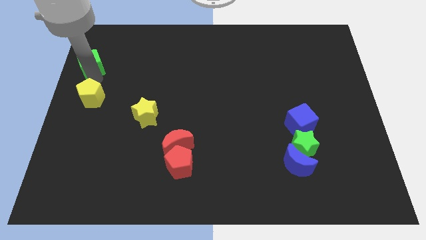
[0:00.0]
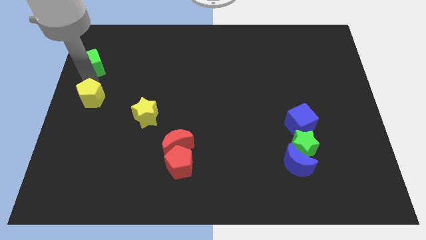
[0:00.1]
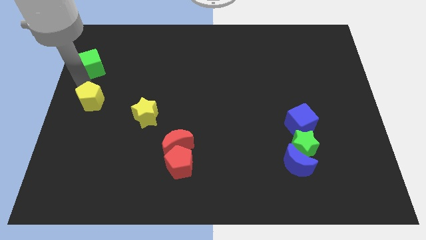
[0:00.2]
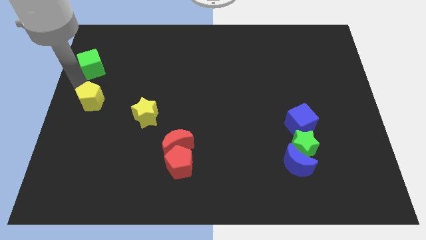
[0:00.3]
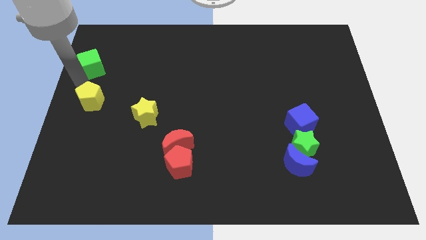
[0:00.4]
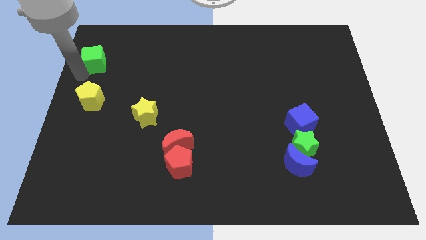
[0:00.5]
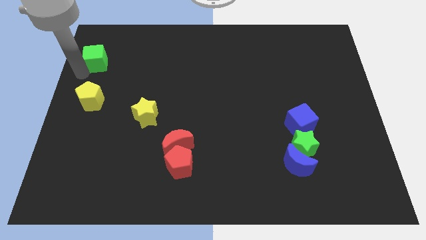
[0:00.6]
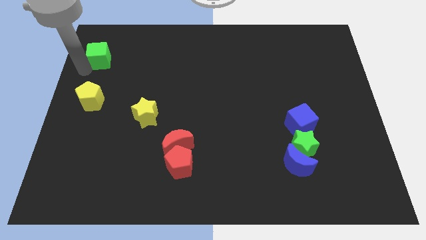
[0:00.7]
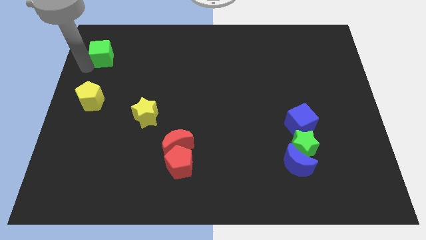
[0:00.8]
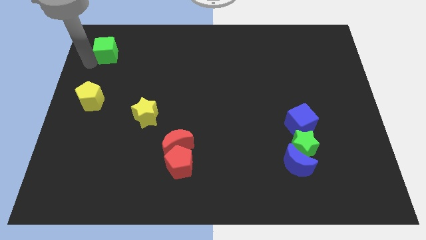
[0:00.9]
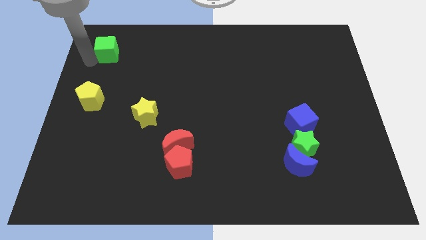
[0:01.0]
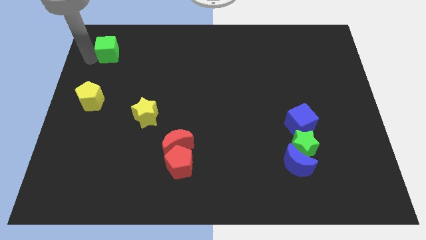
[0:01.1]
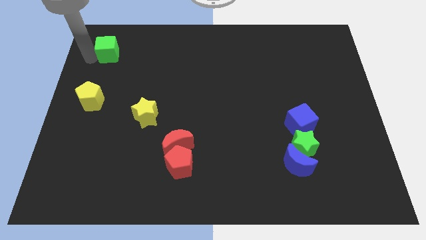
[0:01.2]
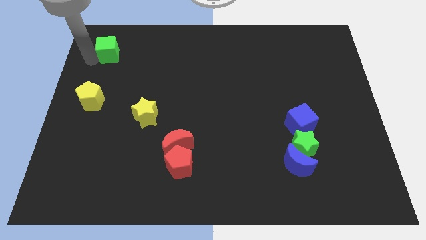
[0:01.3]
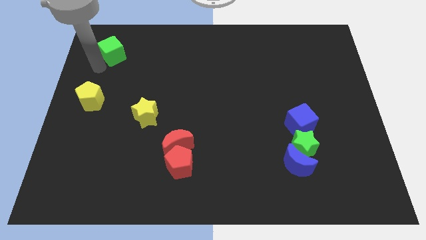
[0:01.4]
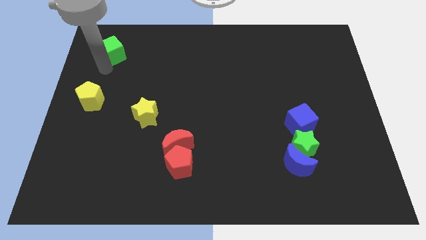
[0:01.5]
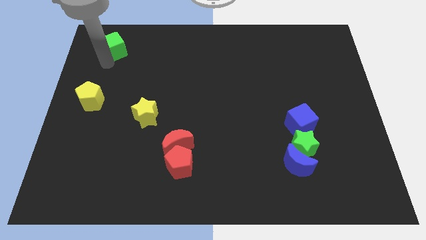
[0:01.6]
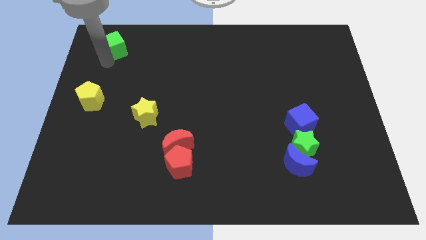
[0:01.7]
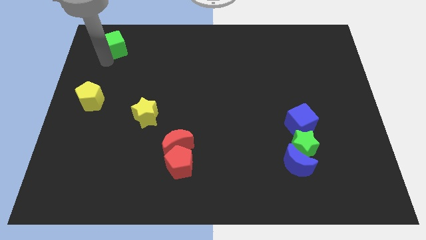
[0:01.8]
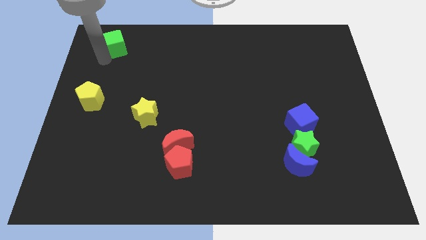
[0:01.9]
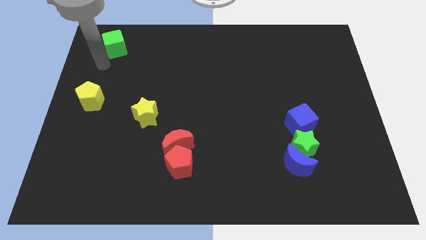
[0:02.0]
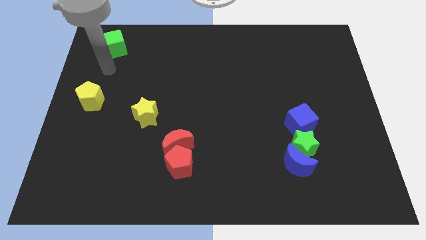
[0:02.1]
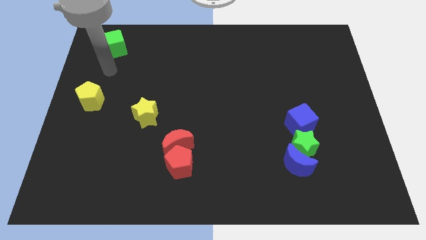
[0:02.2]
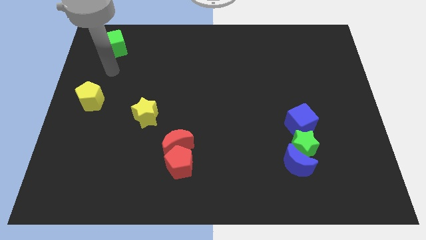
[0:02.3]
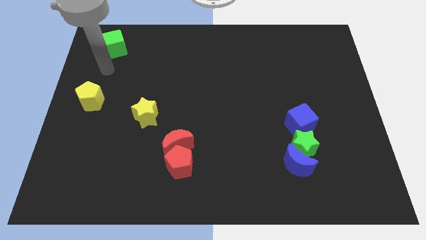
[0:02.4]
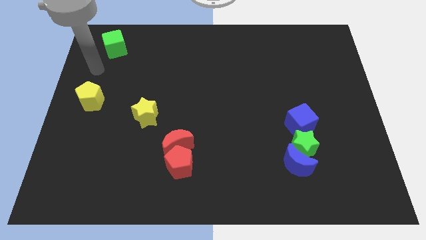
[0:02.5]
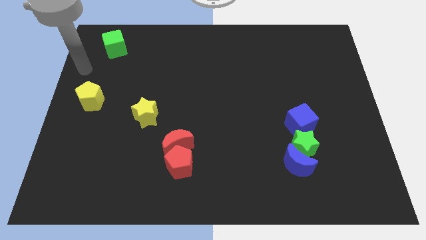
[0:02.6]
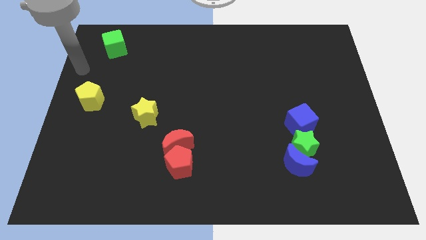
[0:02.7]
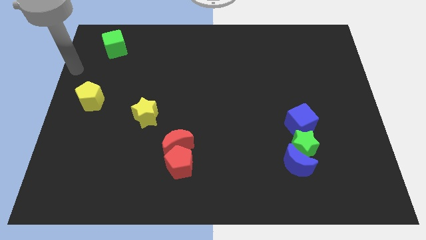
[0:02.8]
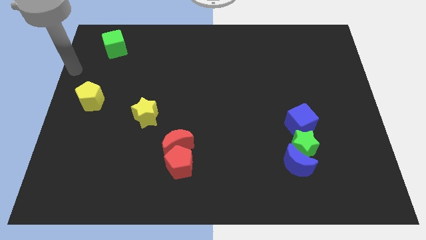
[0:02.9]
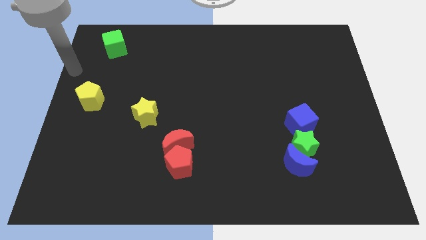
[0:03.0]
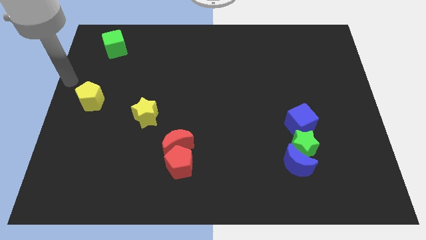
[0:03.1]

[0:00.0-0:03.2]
push the green cube vertically at the top side of the yellow pentagon

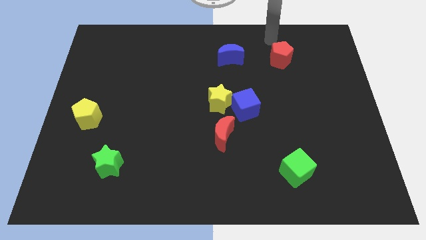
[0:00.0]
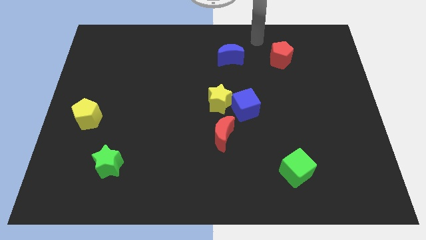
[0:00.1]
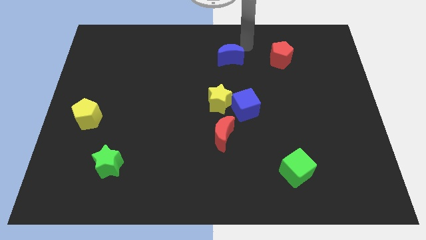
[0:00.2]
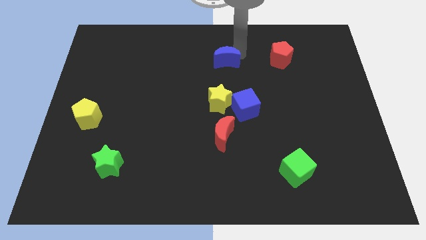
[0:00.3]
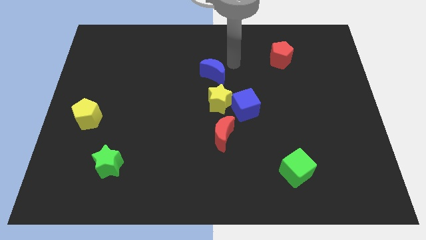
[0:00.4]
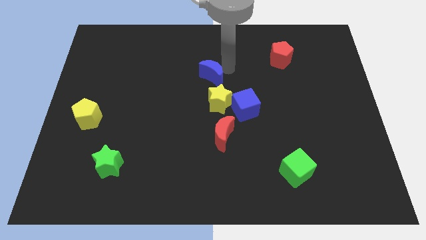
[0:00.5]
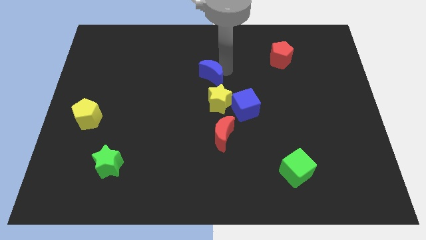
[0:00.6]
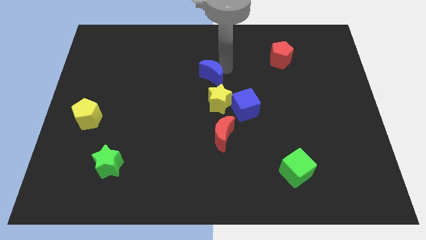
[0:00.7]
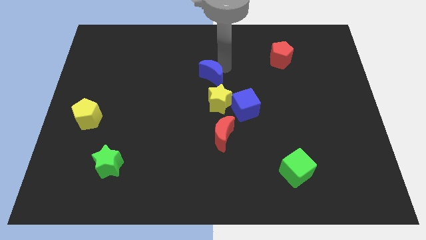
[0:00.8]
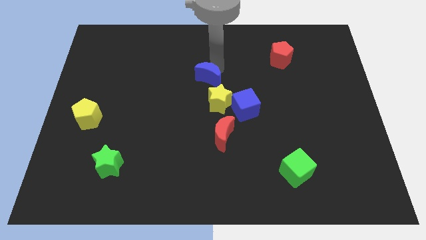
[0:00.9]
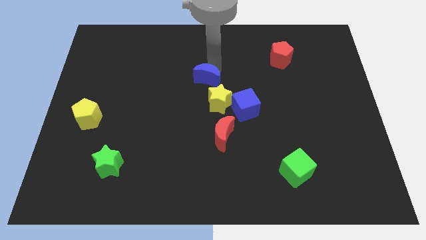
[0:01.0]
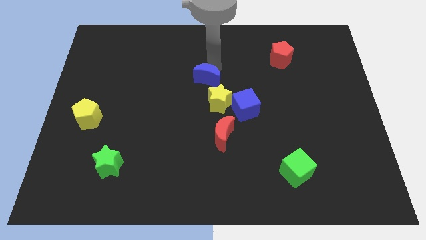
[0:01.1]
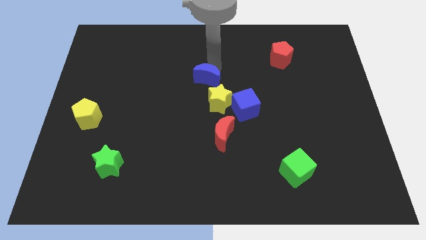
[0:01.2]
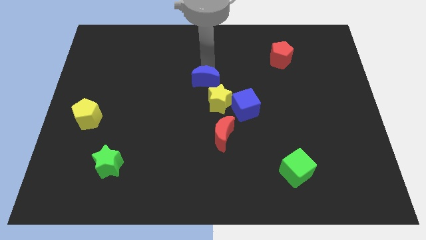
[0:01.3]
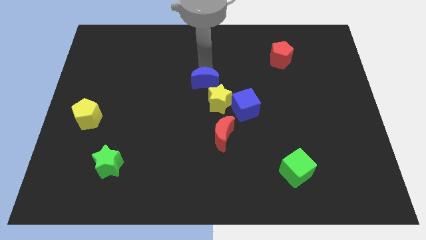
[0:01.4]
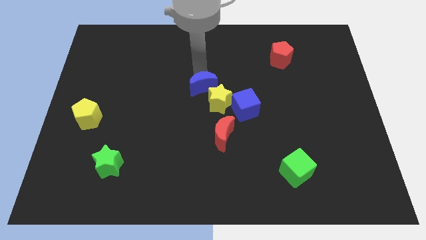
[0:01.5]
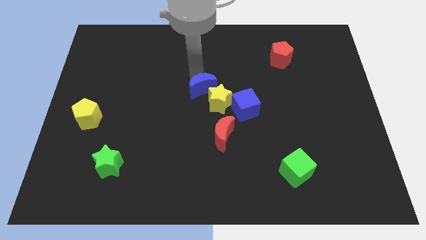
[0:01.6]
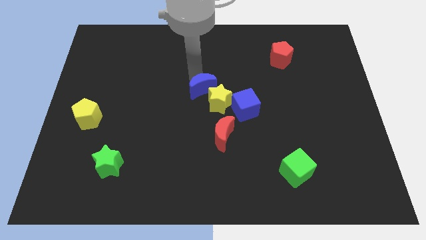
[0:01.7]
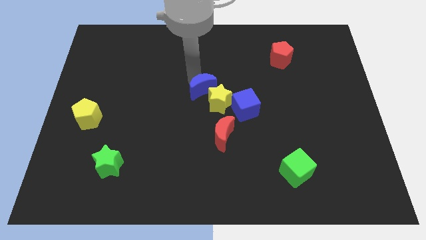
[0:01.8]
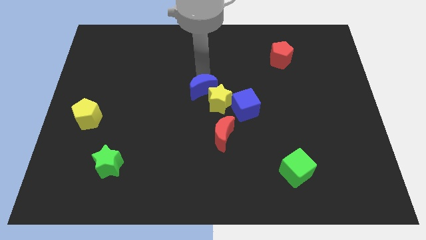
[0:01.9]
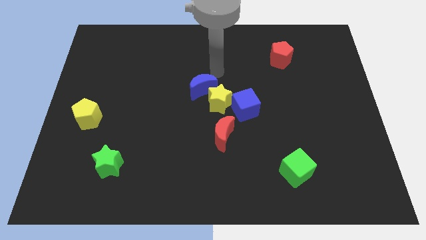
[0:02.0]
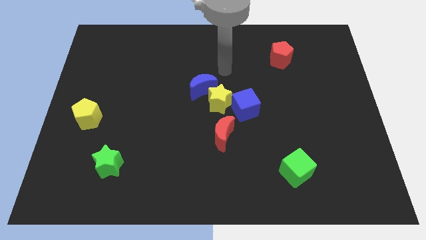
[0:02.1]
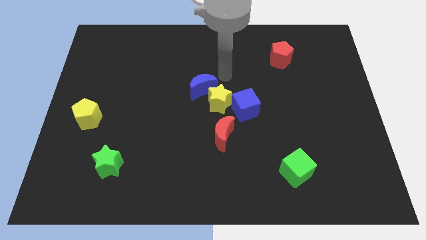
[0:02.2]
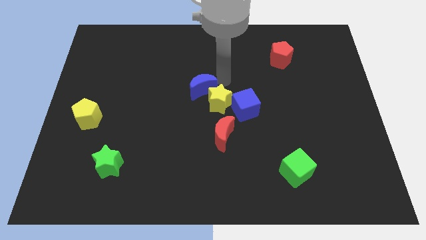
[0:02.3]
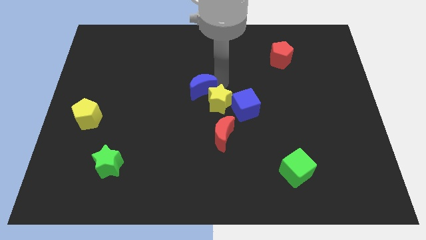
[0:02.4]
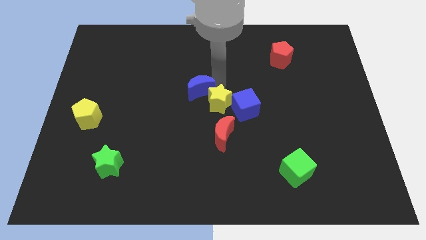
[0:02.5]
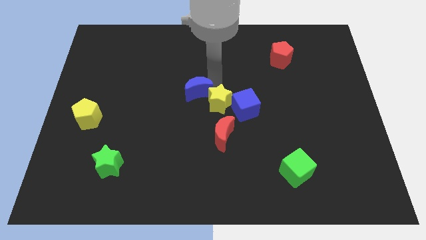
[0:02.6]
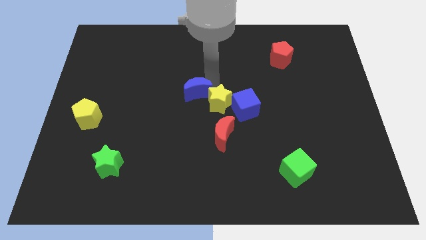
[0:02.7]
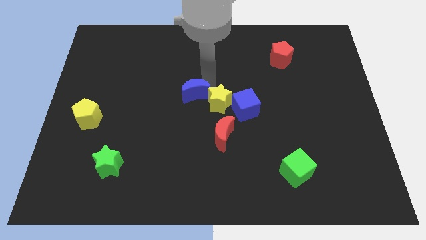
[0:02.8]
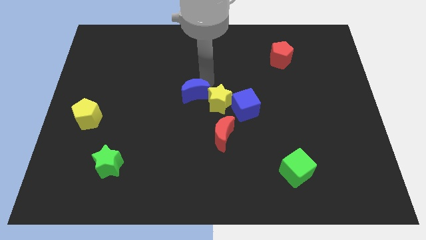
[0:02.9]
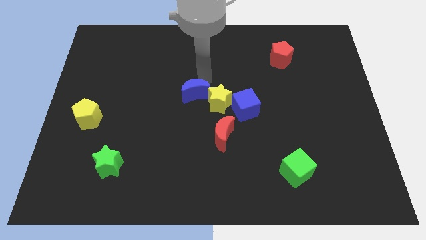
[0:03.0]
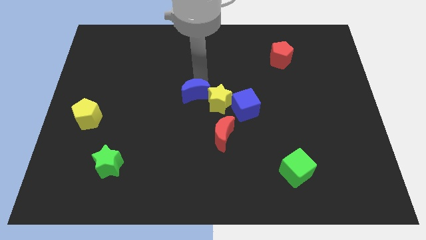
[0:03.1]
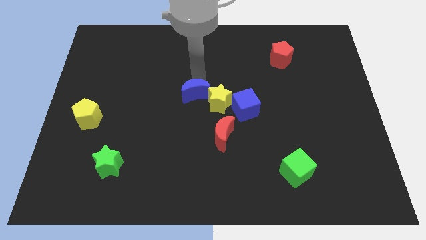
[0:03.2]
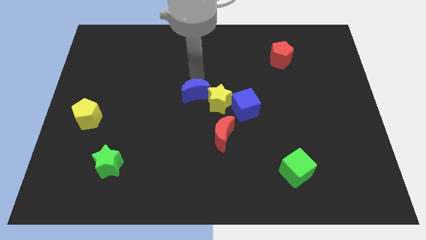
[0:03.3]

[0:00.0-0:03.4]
move the blue crescent close to the left side of the yellow star

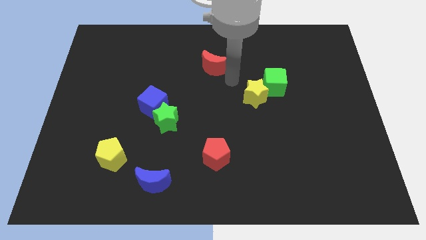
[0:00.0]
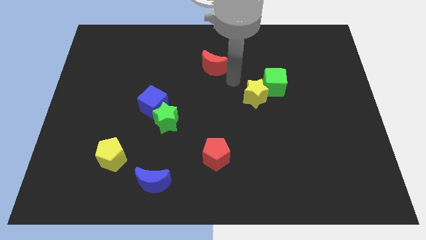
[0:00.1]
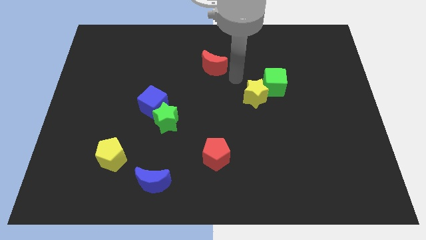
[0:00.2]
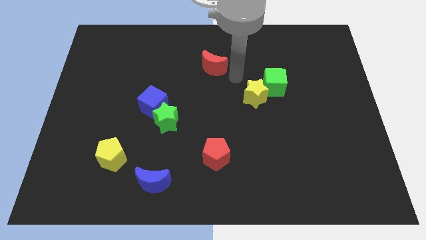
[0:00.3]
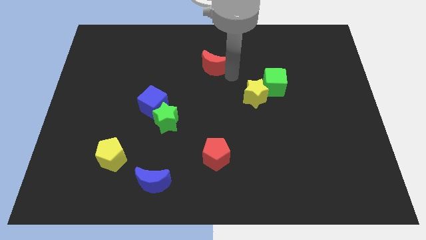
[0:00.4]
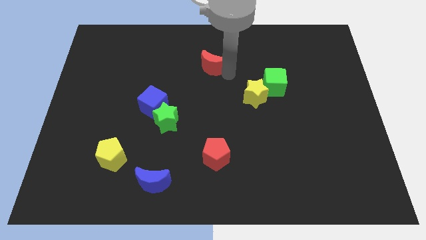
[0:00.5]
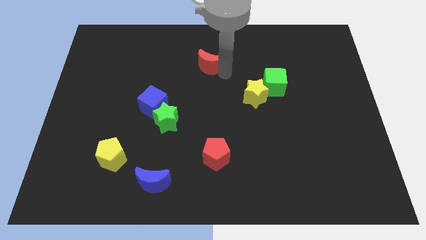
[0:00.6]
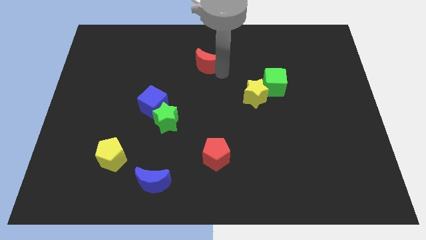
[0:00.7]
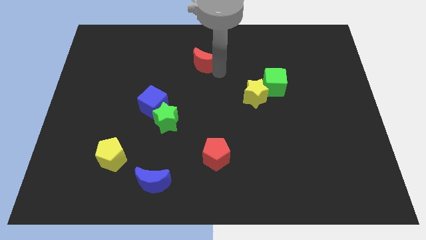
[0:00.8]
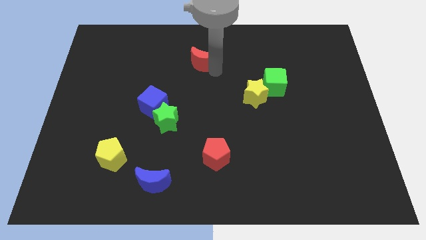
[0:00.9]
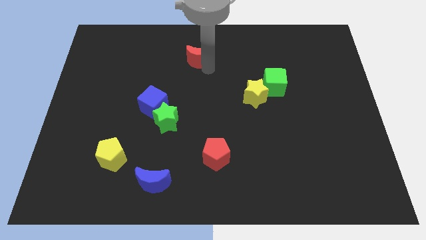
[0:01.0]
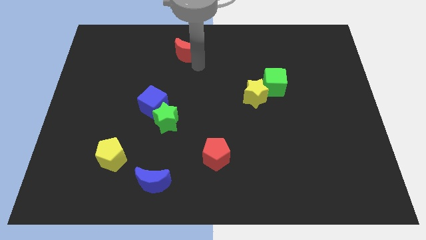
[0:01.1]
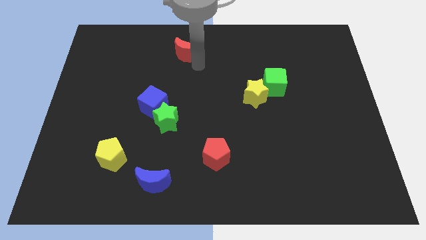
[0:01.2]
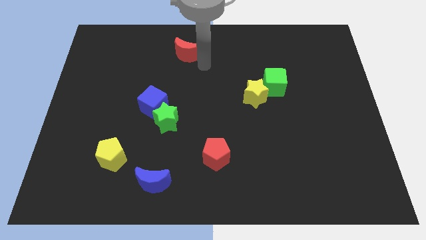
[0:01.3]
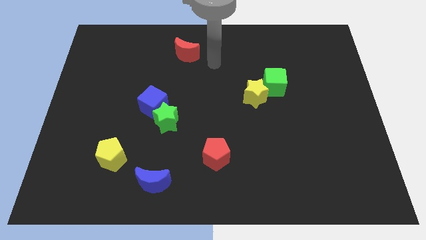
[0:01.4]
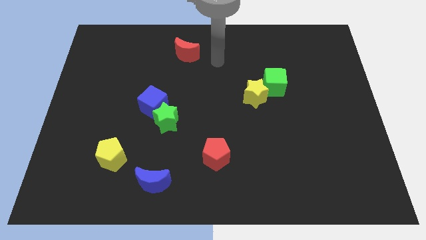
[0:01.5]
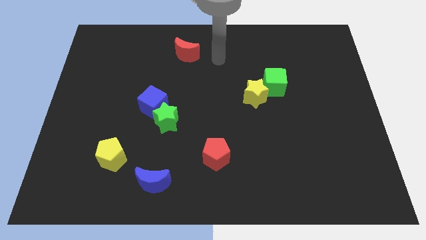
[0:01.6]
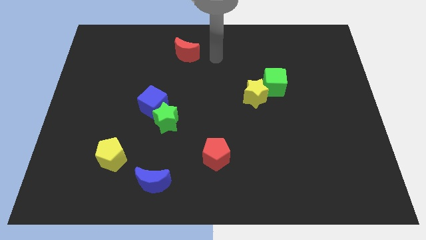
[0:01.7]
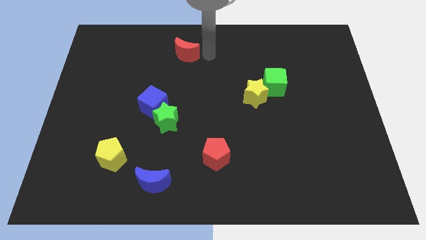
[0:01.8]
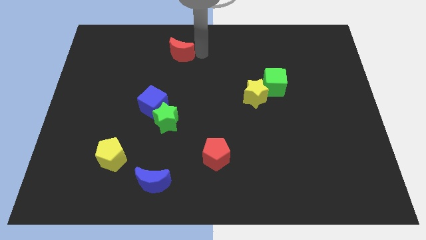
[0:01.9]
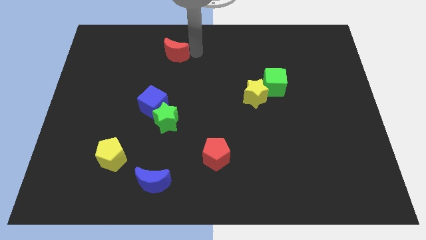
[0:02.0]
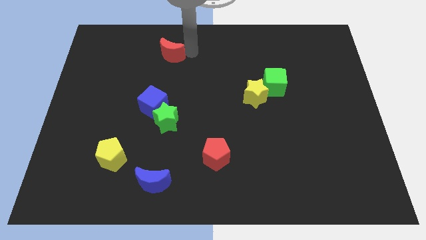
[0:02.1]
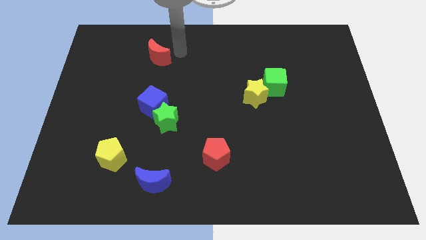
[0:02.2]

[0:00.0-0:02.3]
place the red moon above the blue cube

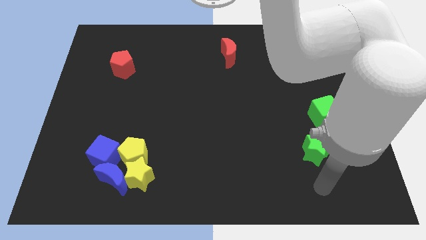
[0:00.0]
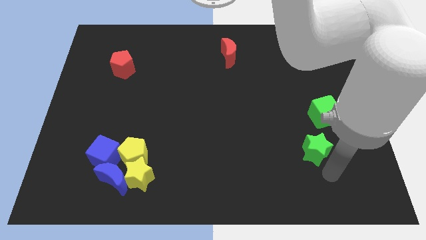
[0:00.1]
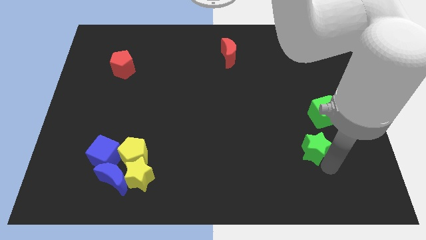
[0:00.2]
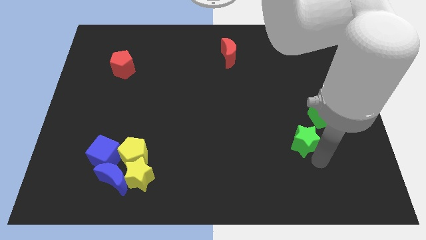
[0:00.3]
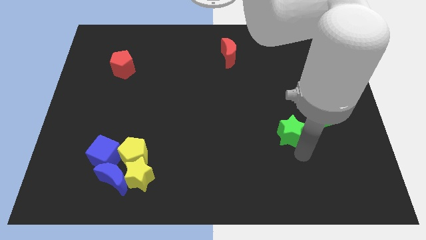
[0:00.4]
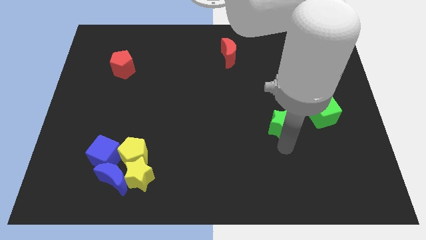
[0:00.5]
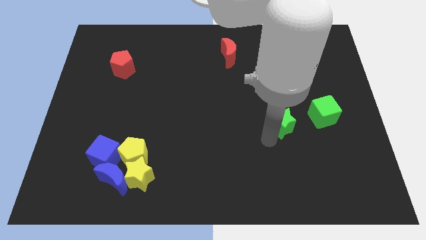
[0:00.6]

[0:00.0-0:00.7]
move the green star to the left of green cube
